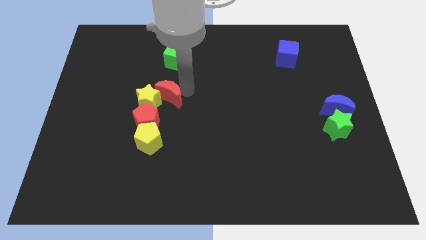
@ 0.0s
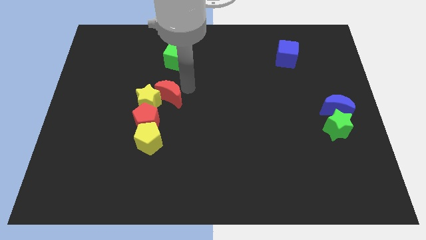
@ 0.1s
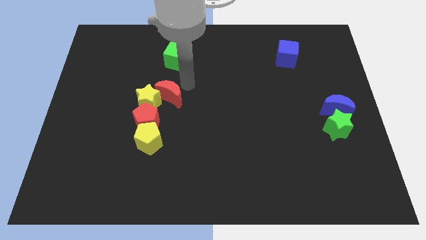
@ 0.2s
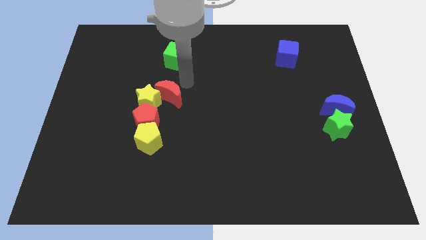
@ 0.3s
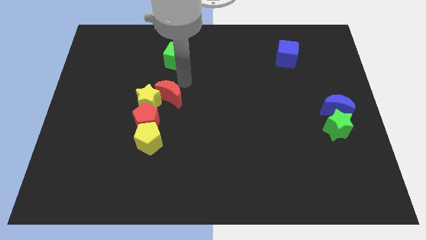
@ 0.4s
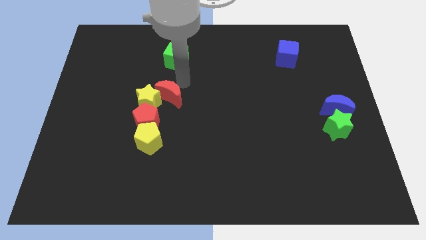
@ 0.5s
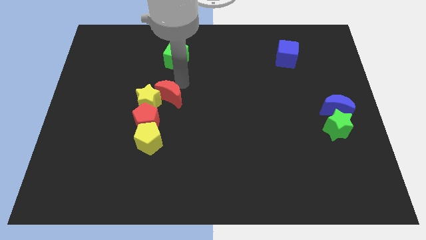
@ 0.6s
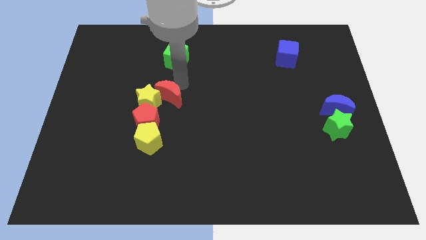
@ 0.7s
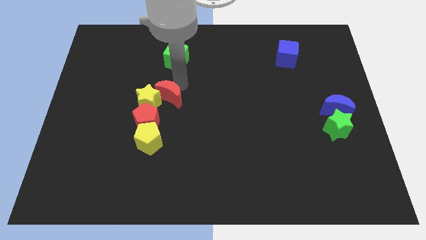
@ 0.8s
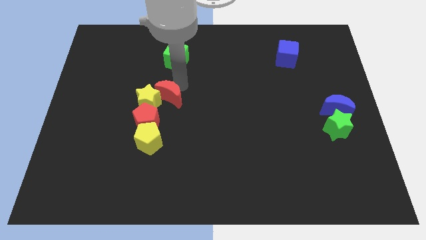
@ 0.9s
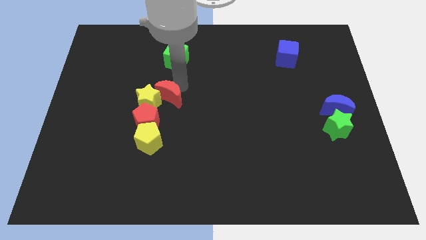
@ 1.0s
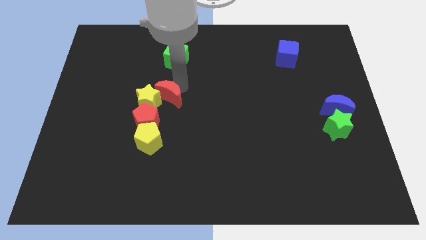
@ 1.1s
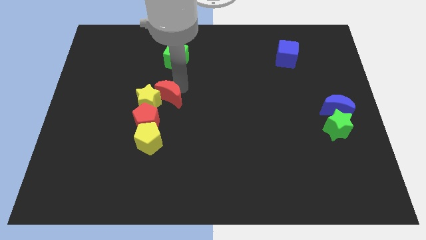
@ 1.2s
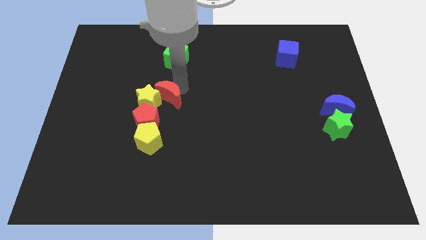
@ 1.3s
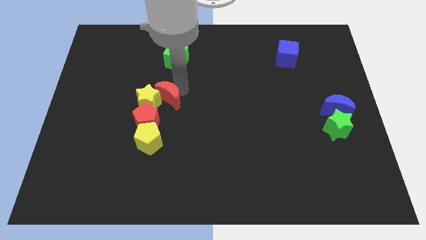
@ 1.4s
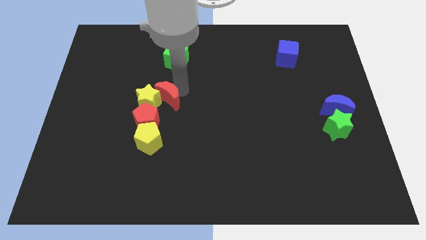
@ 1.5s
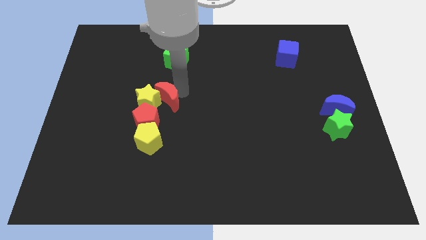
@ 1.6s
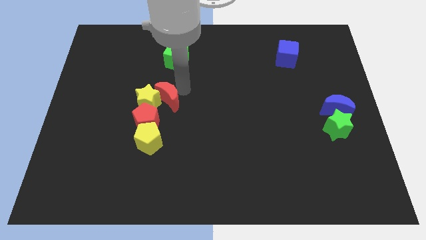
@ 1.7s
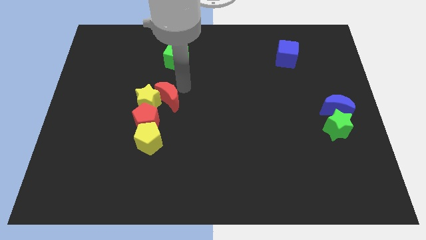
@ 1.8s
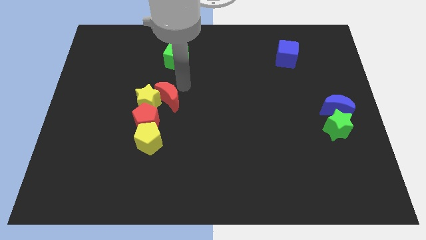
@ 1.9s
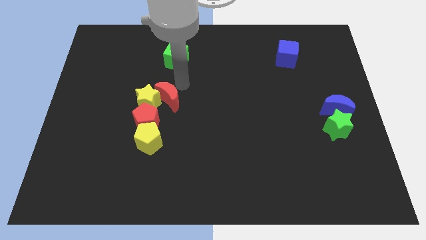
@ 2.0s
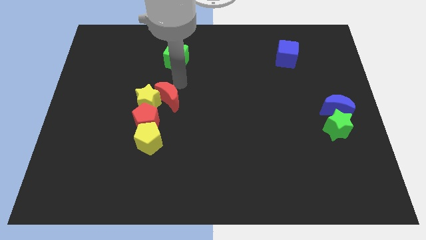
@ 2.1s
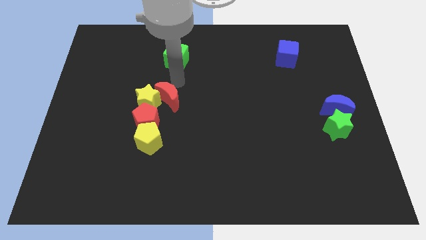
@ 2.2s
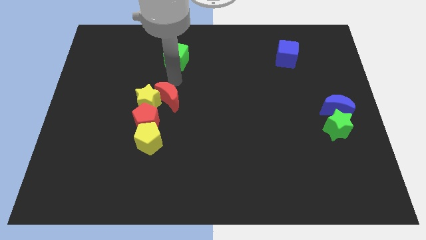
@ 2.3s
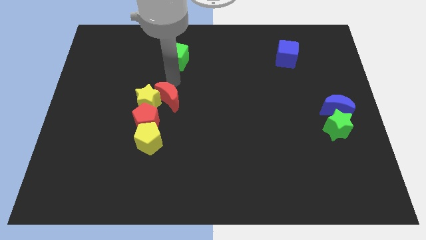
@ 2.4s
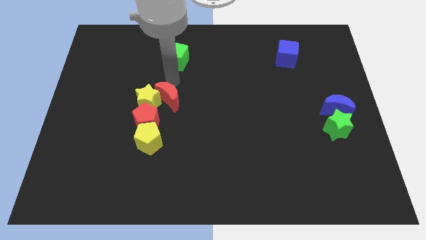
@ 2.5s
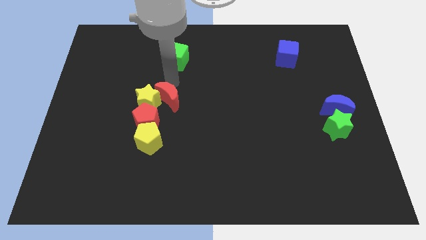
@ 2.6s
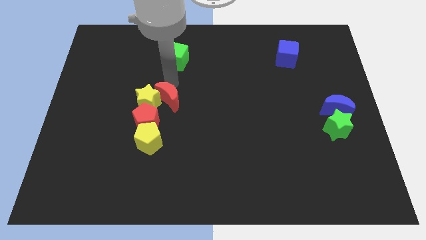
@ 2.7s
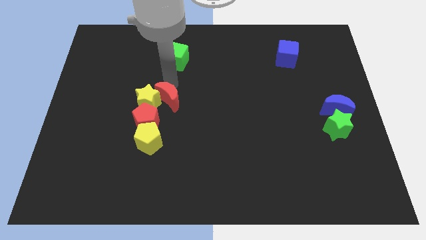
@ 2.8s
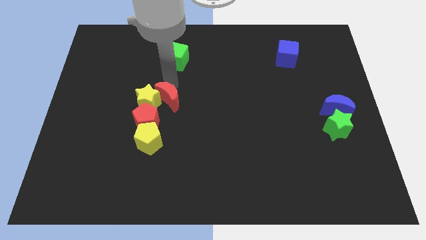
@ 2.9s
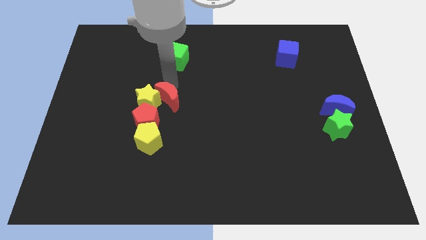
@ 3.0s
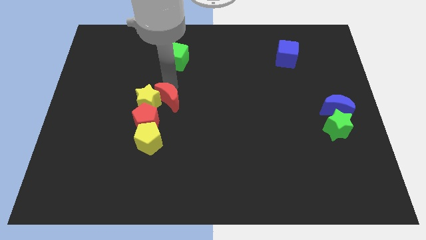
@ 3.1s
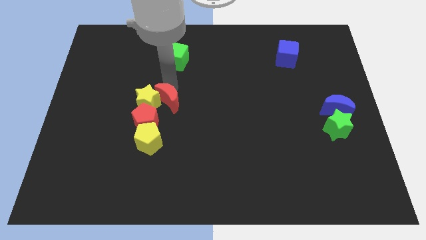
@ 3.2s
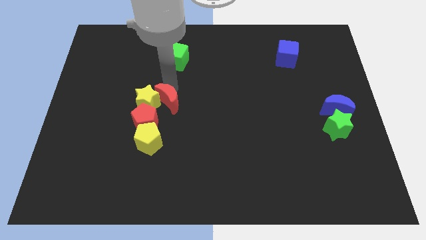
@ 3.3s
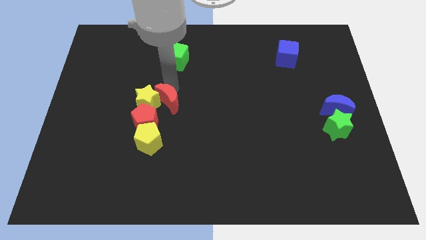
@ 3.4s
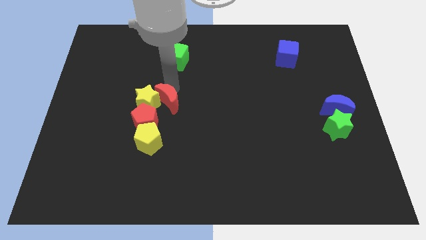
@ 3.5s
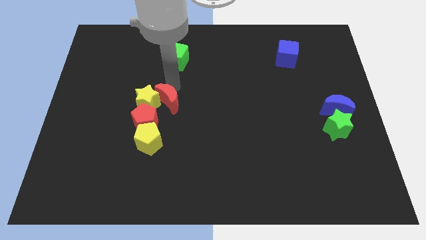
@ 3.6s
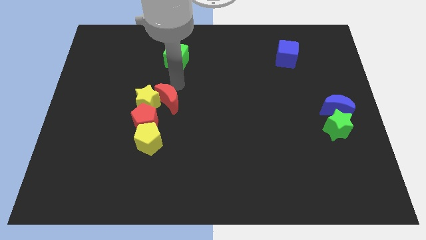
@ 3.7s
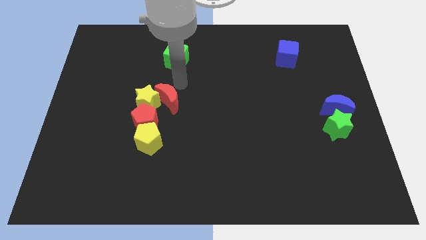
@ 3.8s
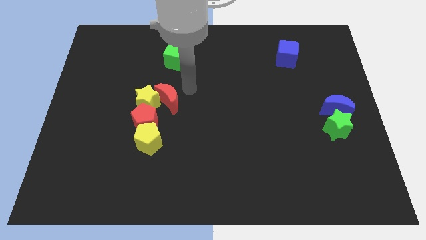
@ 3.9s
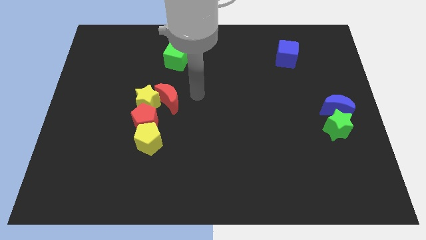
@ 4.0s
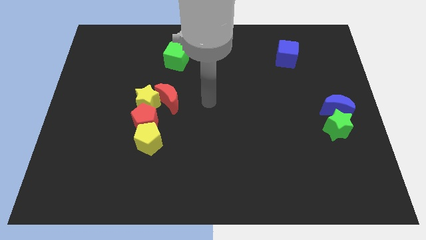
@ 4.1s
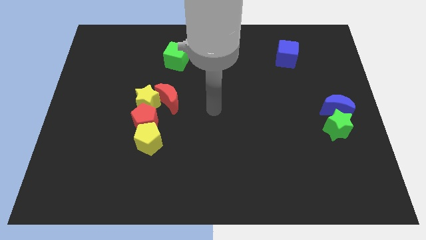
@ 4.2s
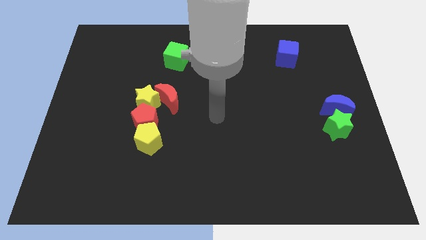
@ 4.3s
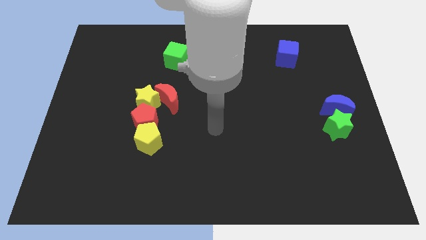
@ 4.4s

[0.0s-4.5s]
place your arm at the center of the board

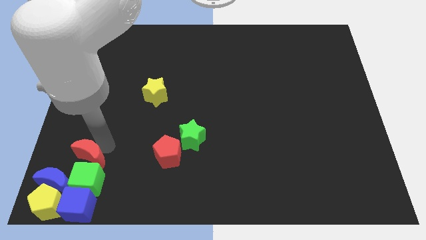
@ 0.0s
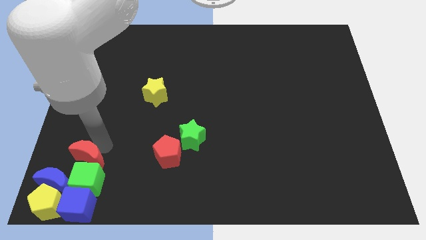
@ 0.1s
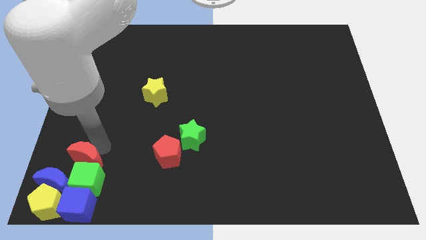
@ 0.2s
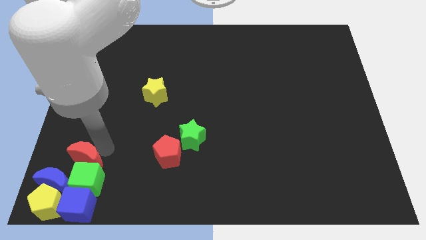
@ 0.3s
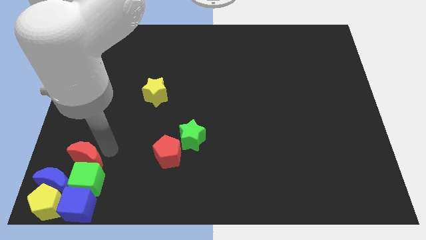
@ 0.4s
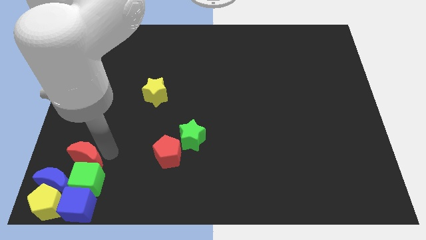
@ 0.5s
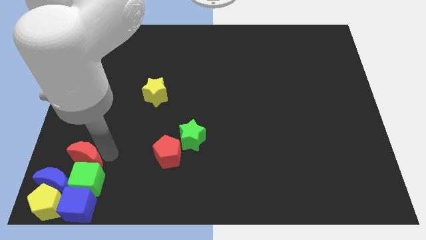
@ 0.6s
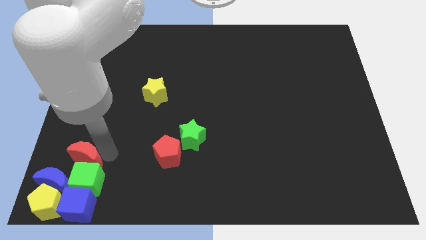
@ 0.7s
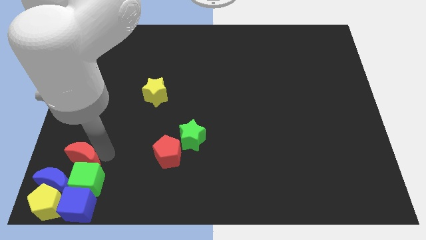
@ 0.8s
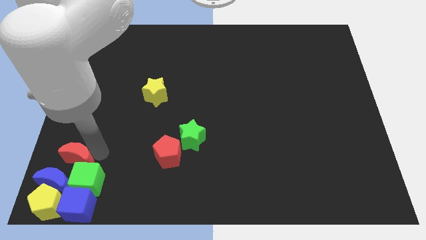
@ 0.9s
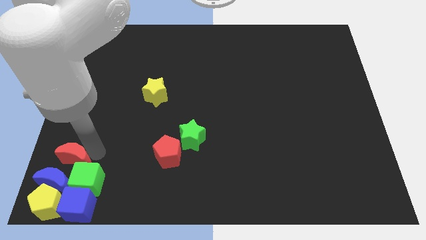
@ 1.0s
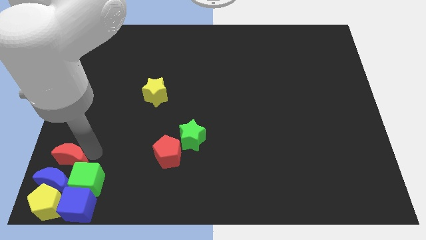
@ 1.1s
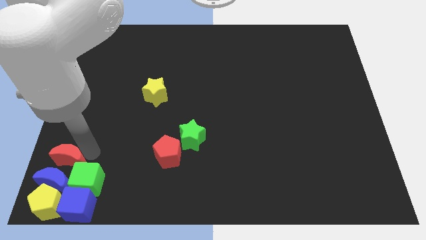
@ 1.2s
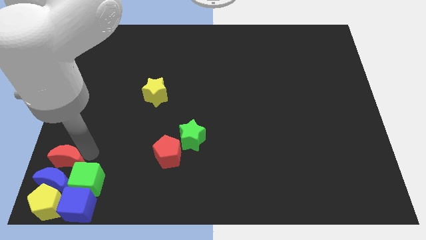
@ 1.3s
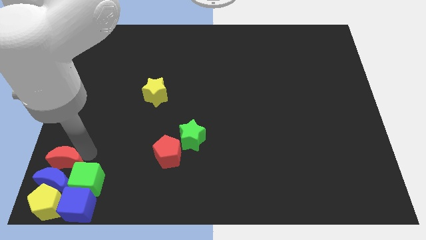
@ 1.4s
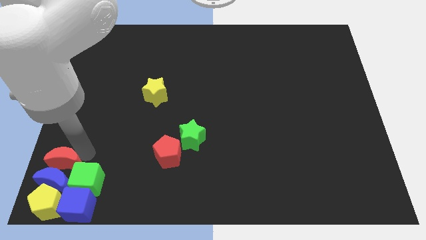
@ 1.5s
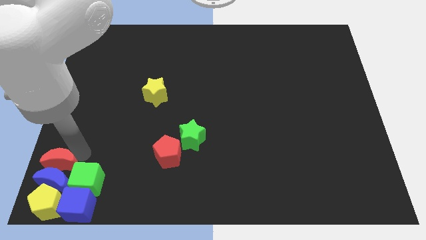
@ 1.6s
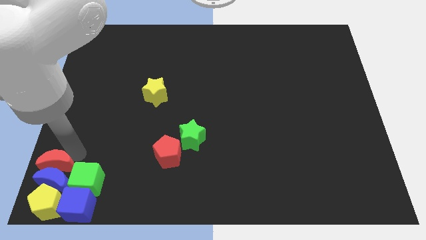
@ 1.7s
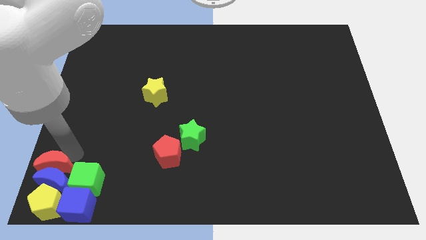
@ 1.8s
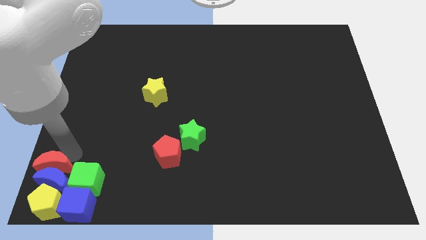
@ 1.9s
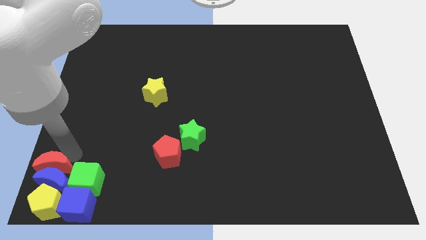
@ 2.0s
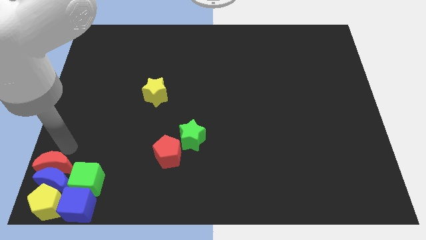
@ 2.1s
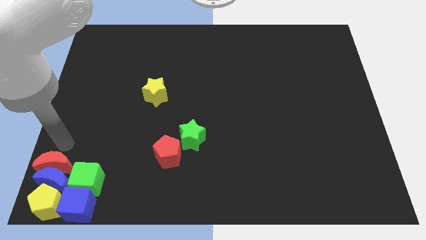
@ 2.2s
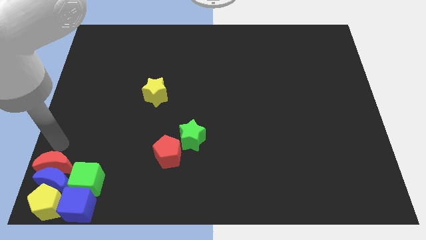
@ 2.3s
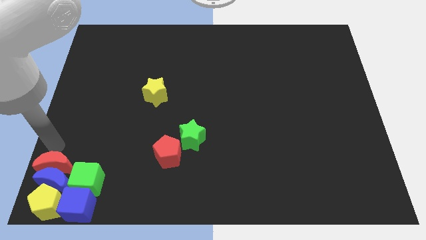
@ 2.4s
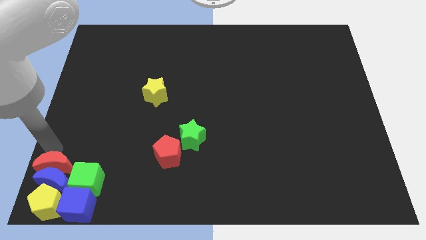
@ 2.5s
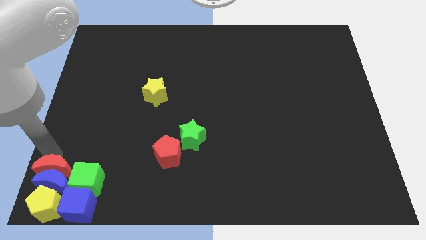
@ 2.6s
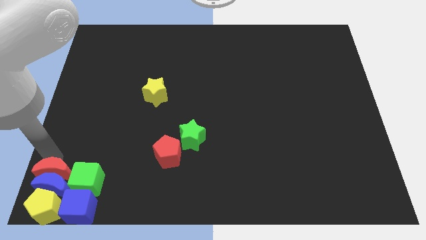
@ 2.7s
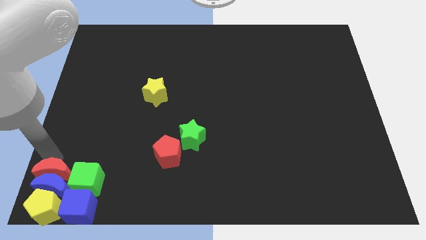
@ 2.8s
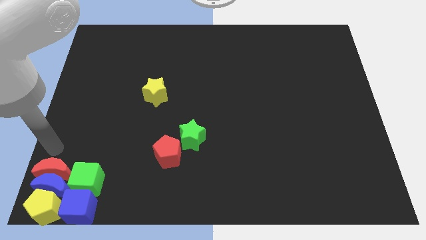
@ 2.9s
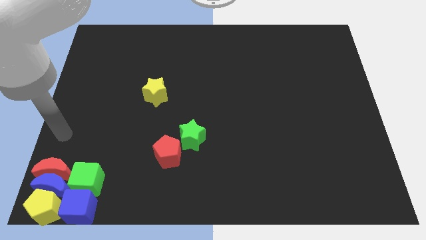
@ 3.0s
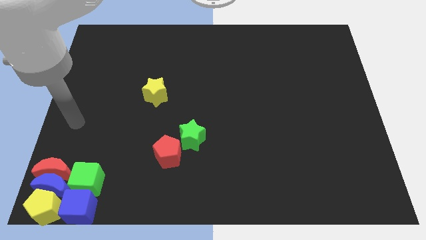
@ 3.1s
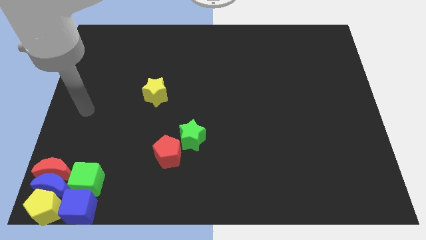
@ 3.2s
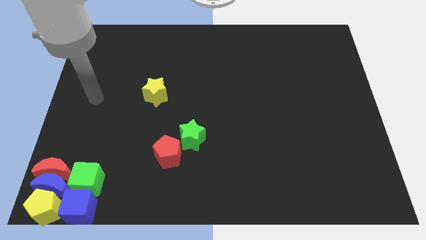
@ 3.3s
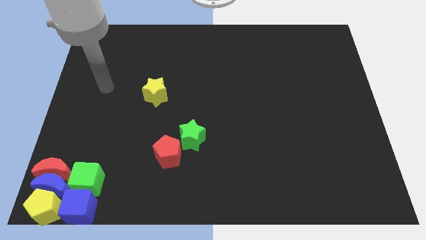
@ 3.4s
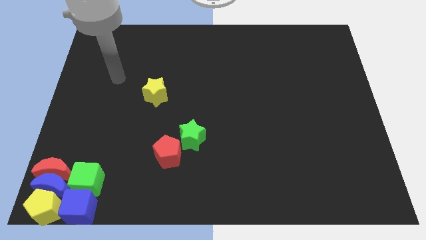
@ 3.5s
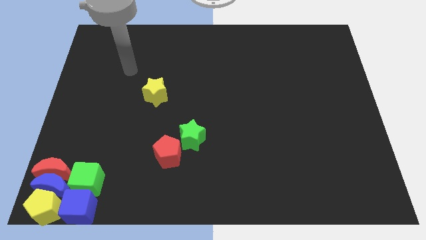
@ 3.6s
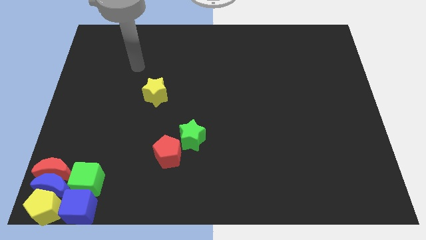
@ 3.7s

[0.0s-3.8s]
move red moon above the blue moon

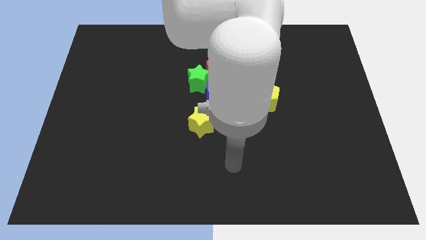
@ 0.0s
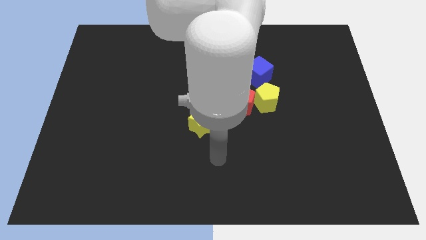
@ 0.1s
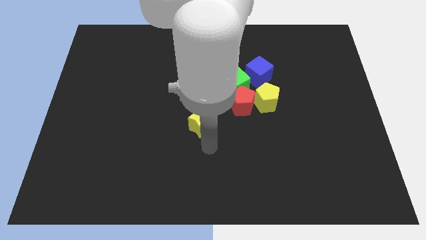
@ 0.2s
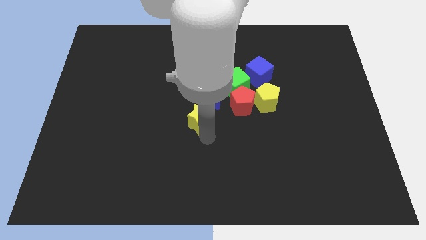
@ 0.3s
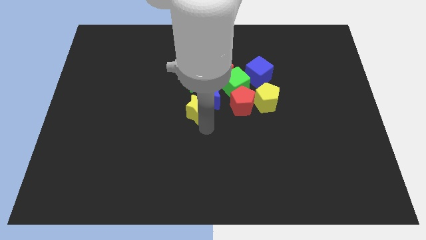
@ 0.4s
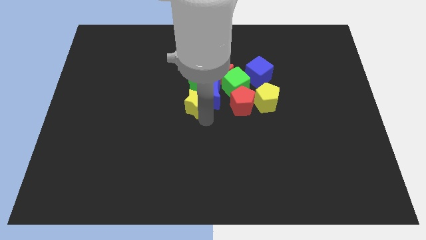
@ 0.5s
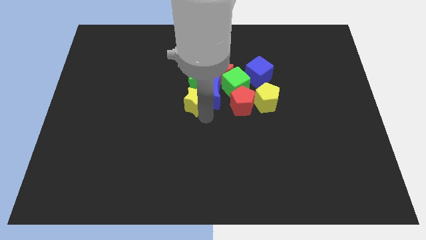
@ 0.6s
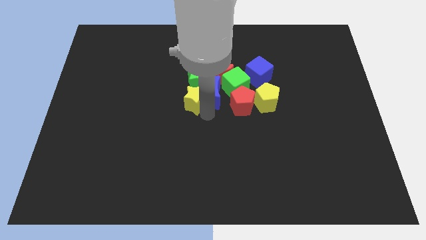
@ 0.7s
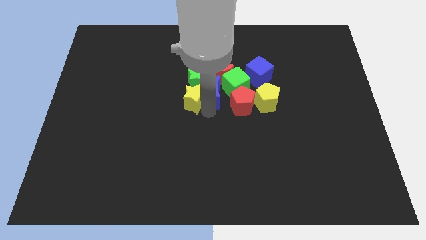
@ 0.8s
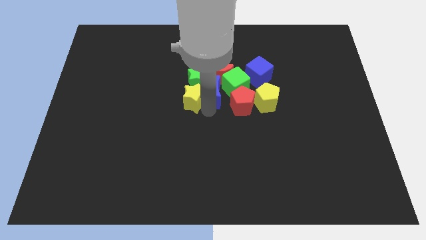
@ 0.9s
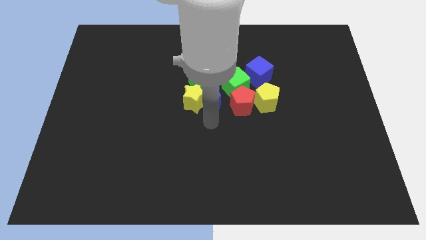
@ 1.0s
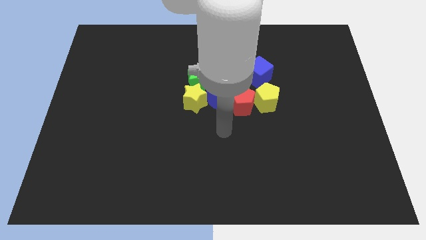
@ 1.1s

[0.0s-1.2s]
make the yellow star to touch the green star
